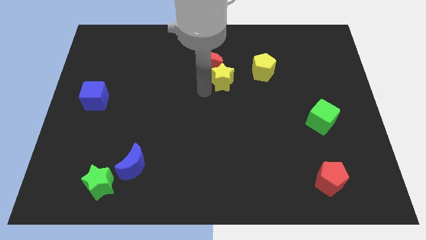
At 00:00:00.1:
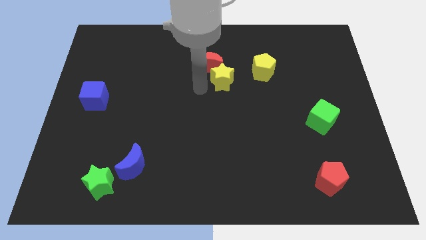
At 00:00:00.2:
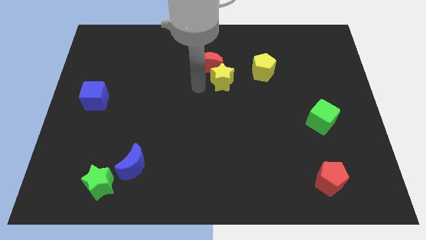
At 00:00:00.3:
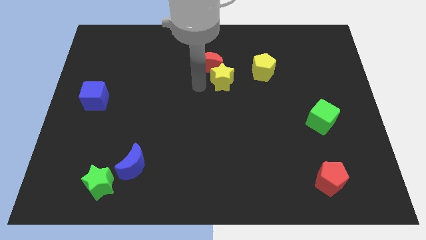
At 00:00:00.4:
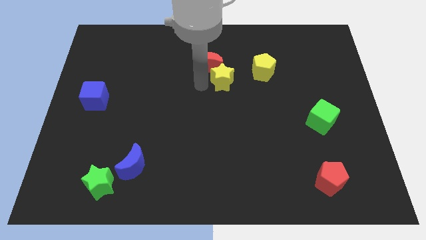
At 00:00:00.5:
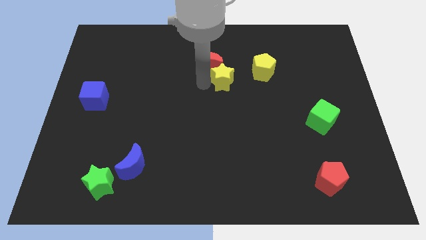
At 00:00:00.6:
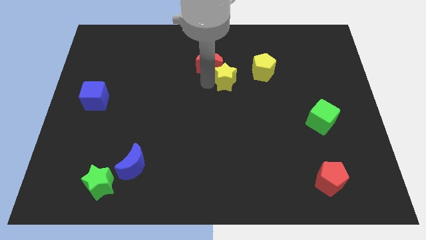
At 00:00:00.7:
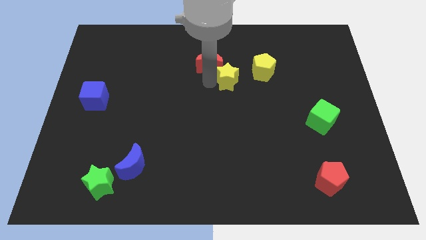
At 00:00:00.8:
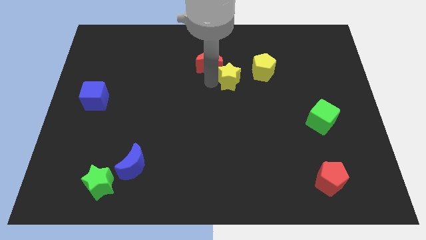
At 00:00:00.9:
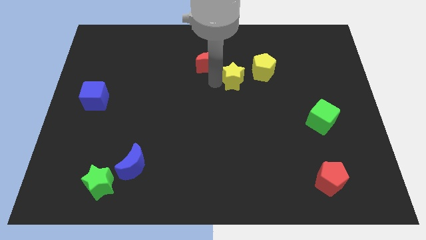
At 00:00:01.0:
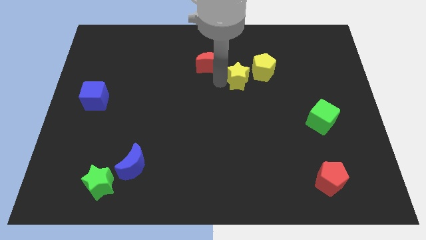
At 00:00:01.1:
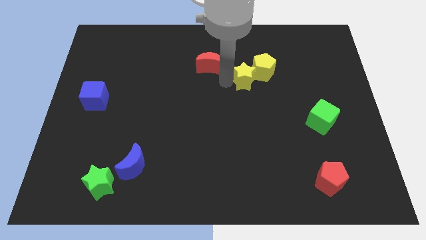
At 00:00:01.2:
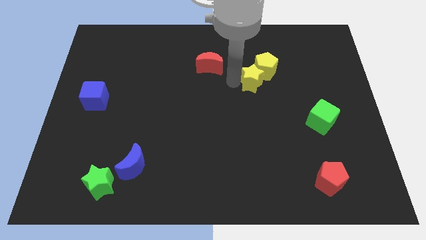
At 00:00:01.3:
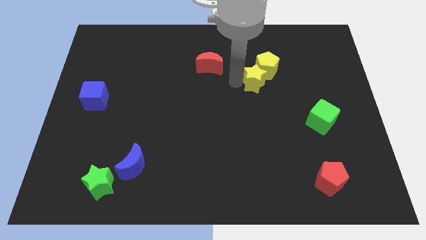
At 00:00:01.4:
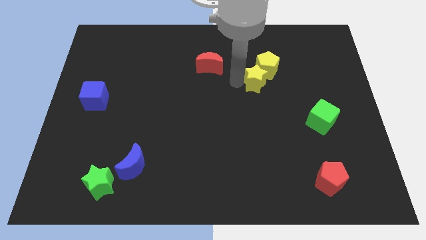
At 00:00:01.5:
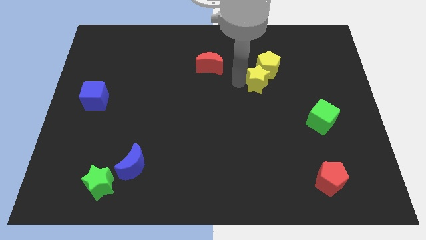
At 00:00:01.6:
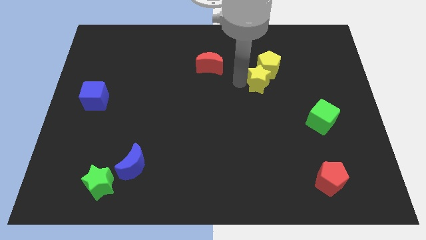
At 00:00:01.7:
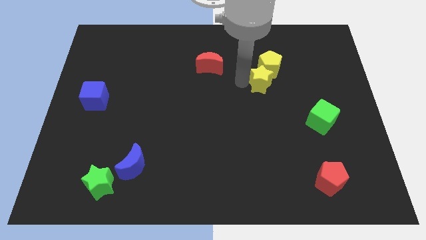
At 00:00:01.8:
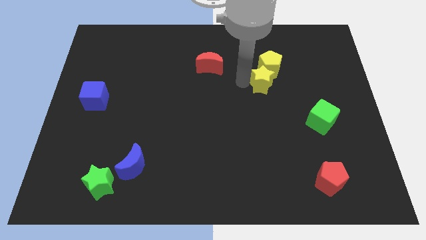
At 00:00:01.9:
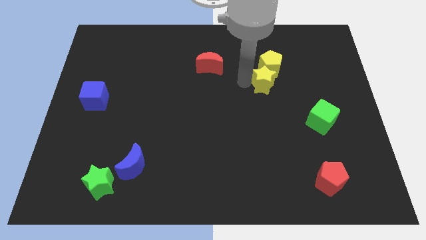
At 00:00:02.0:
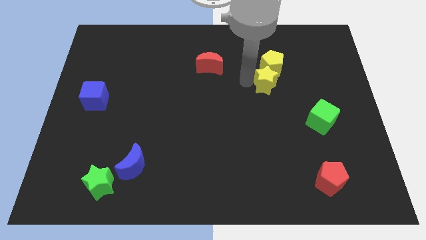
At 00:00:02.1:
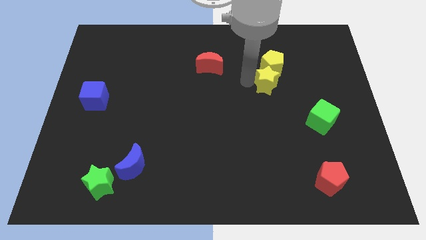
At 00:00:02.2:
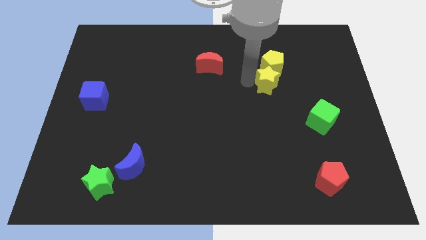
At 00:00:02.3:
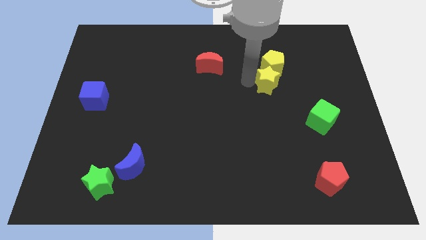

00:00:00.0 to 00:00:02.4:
push yellow star into yellow pentagon

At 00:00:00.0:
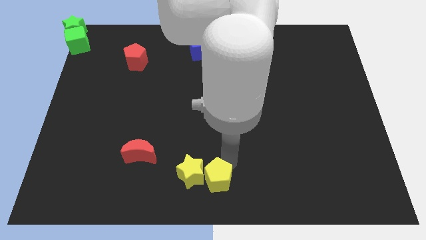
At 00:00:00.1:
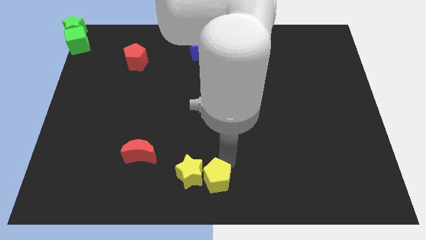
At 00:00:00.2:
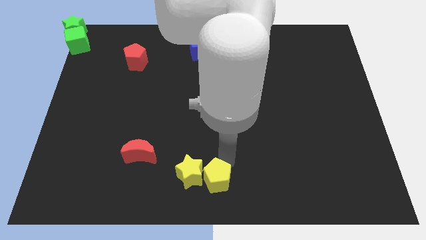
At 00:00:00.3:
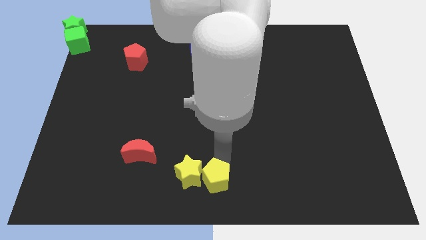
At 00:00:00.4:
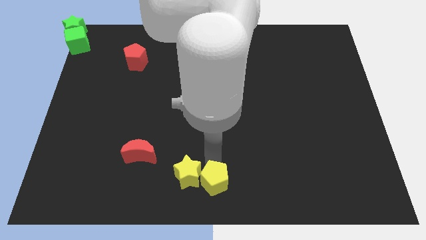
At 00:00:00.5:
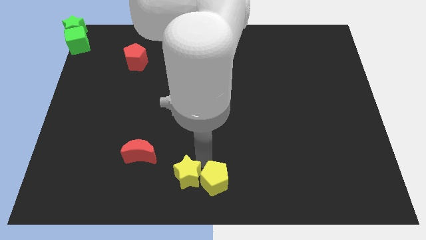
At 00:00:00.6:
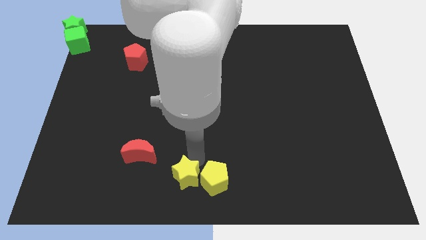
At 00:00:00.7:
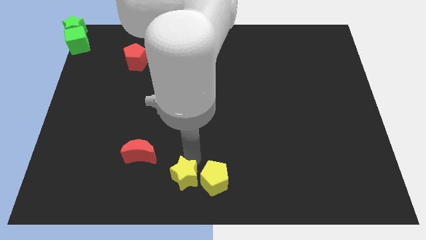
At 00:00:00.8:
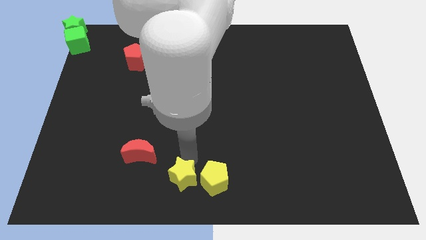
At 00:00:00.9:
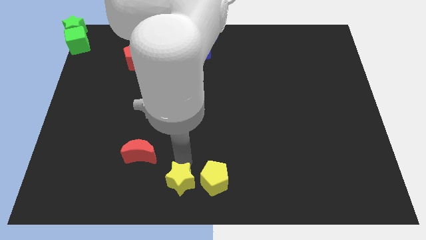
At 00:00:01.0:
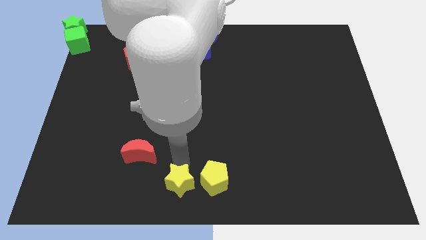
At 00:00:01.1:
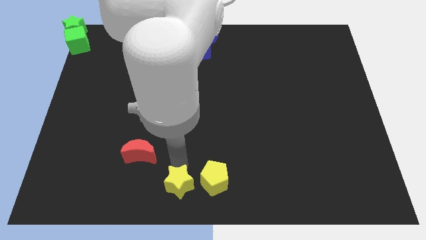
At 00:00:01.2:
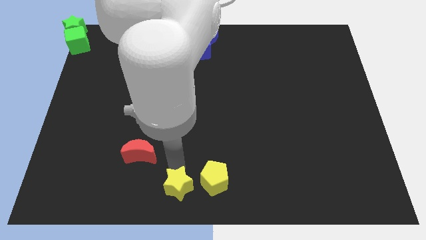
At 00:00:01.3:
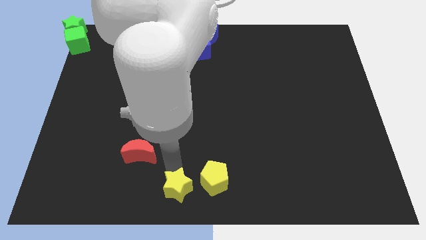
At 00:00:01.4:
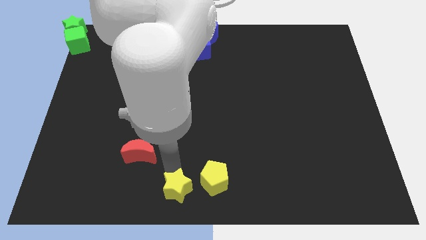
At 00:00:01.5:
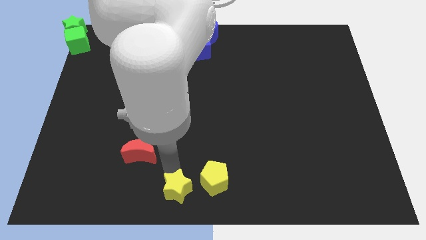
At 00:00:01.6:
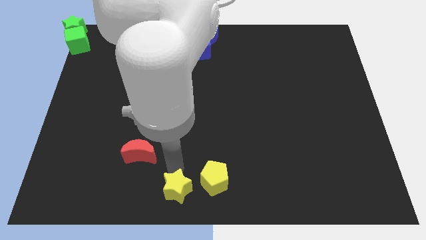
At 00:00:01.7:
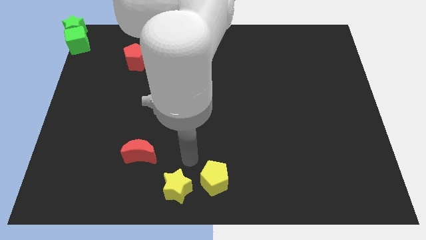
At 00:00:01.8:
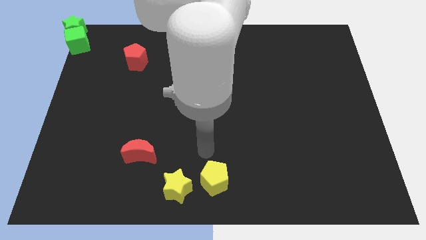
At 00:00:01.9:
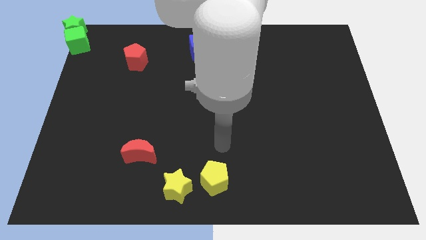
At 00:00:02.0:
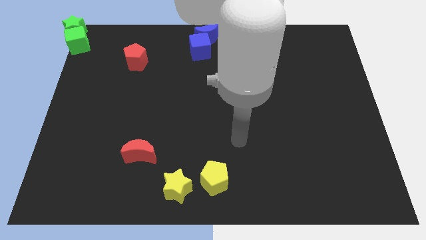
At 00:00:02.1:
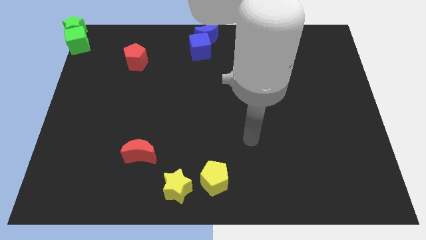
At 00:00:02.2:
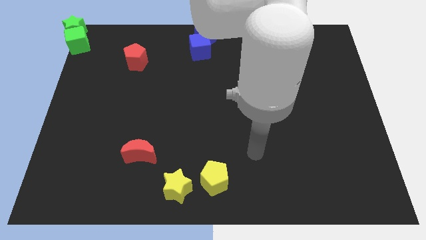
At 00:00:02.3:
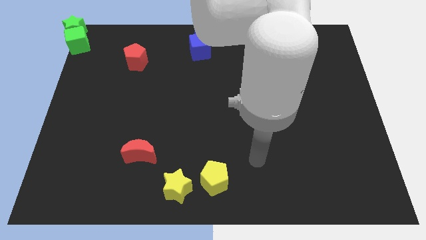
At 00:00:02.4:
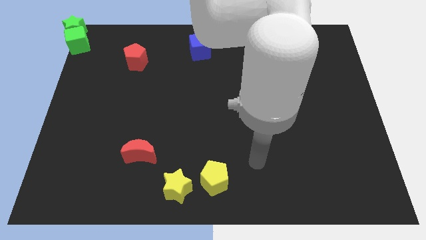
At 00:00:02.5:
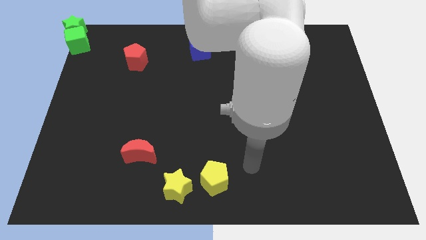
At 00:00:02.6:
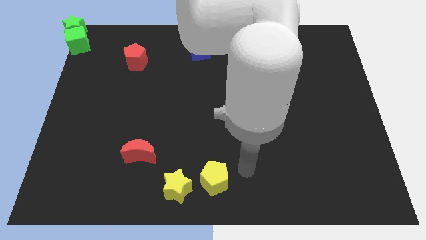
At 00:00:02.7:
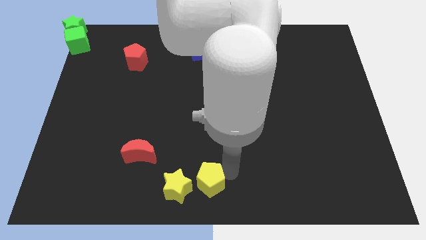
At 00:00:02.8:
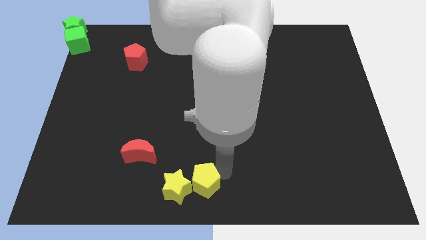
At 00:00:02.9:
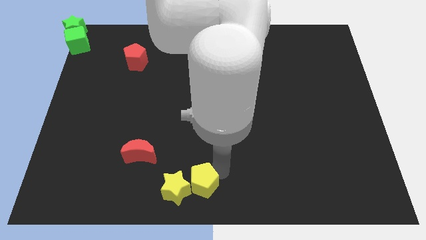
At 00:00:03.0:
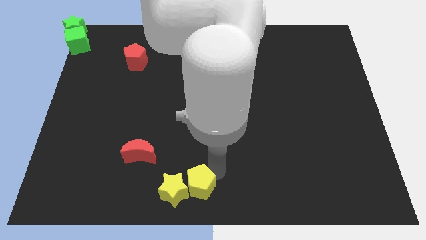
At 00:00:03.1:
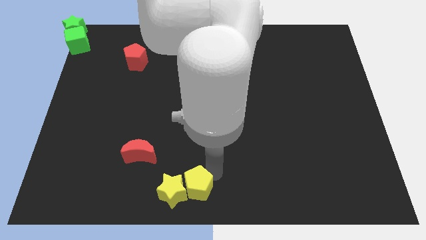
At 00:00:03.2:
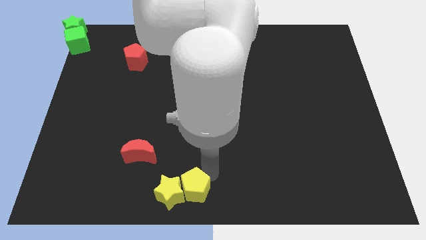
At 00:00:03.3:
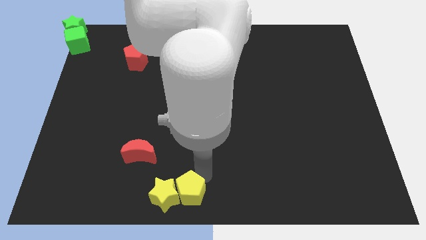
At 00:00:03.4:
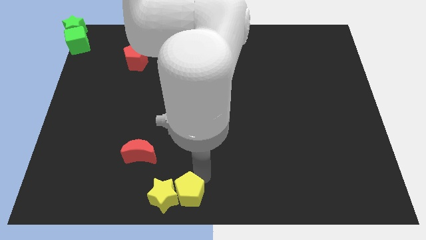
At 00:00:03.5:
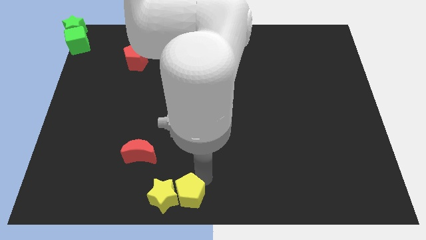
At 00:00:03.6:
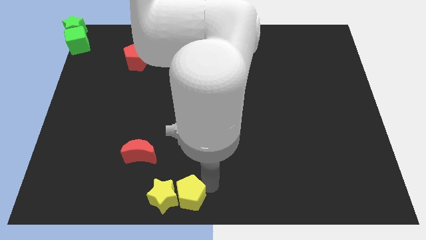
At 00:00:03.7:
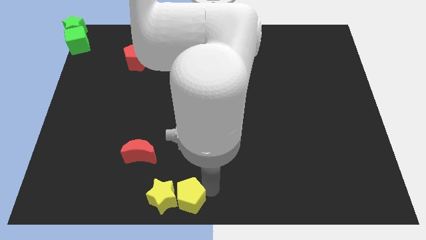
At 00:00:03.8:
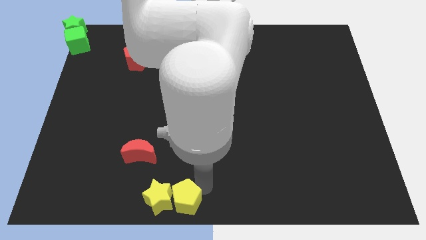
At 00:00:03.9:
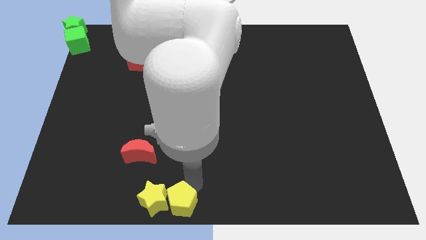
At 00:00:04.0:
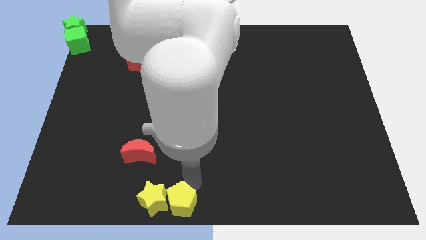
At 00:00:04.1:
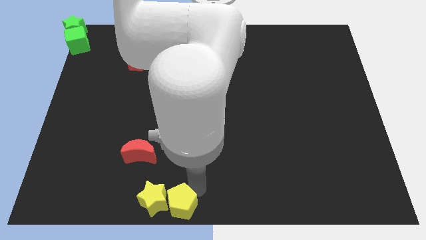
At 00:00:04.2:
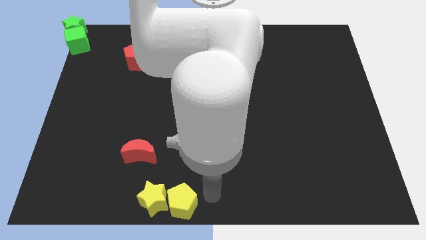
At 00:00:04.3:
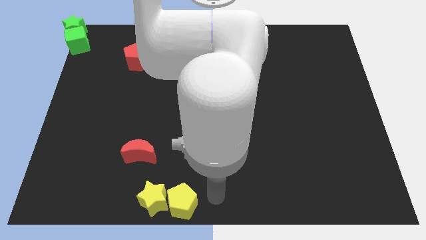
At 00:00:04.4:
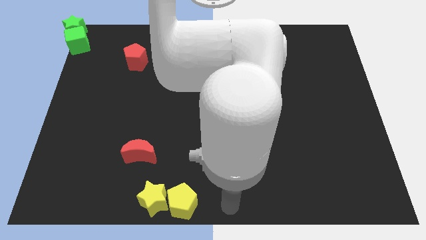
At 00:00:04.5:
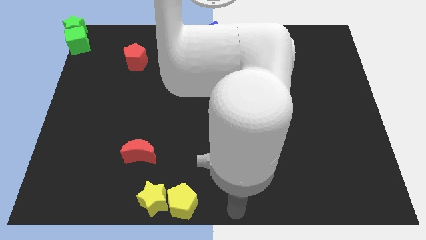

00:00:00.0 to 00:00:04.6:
slide the yellow star and yellow pentagon to the bottom center of the board

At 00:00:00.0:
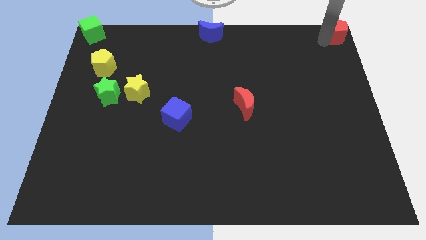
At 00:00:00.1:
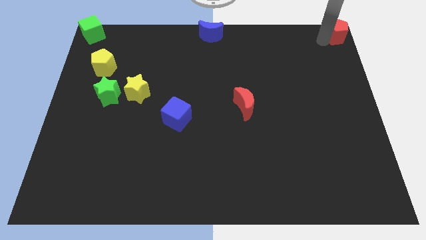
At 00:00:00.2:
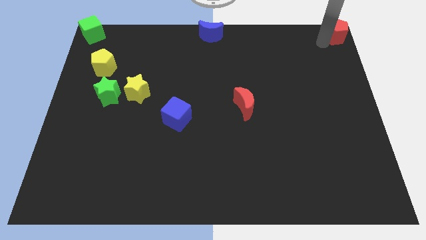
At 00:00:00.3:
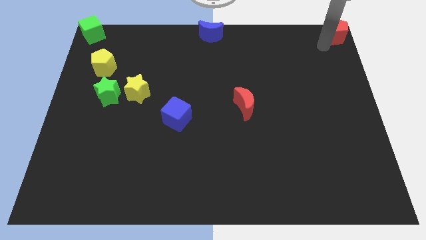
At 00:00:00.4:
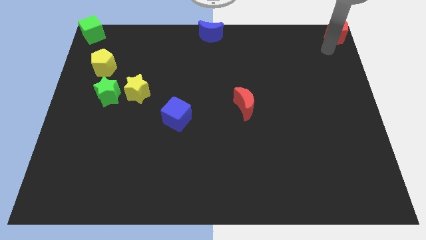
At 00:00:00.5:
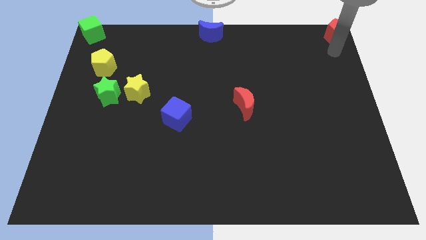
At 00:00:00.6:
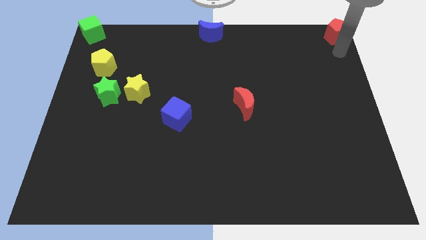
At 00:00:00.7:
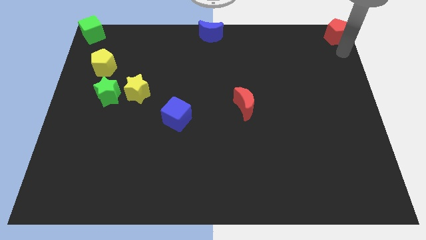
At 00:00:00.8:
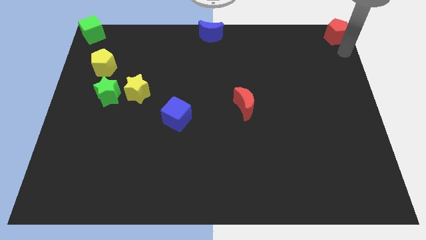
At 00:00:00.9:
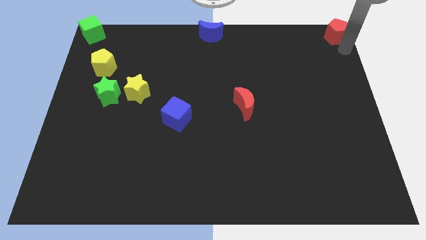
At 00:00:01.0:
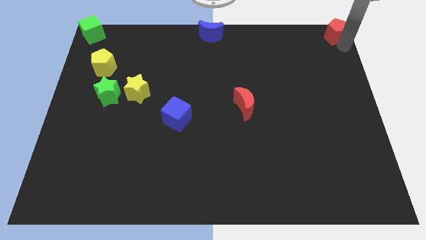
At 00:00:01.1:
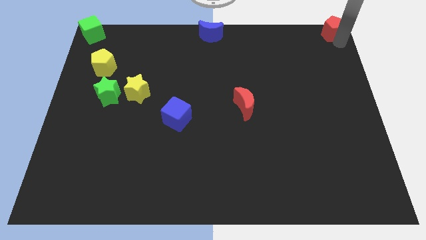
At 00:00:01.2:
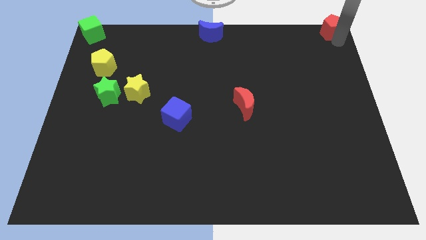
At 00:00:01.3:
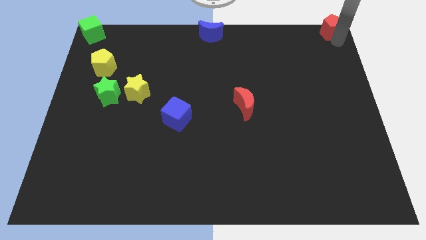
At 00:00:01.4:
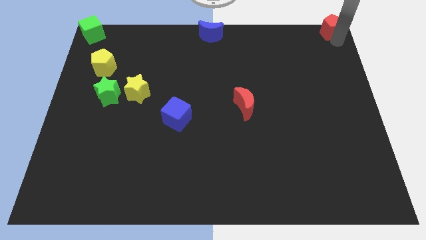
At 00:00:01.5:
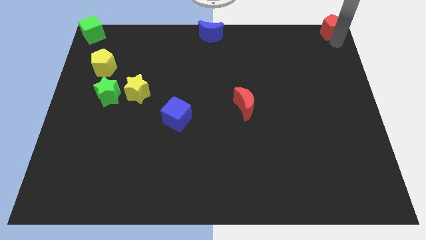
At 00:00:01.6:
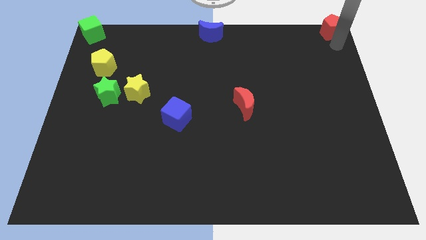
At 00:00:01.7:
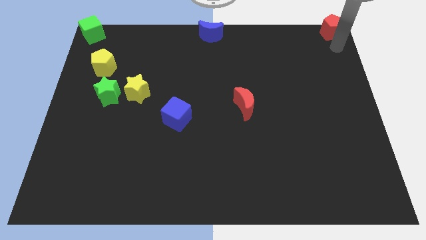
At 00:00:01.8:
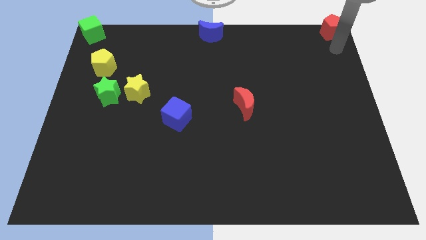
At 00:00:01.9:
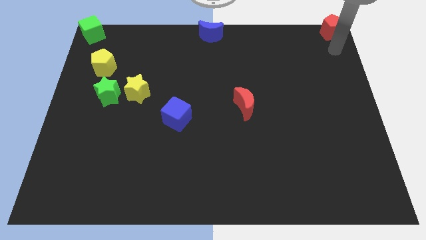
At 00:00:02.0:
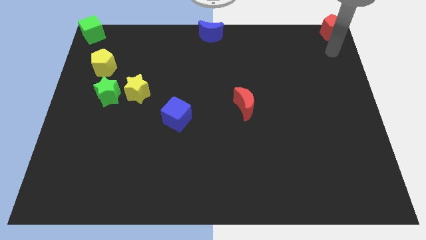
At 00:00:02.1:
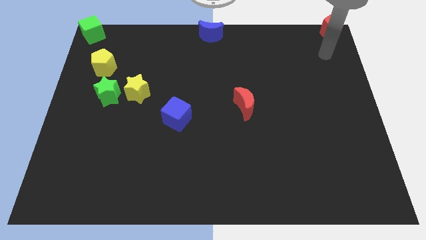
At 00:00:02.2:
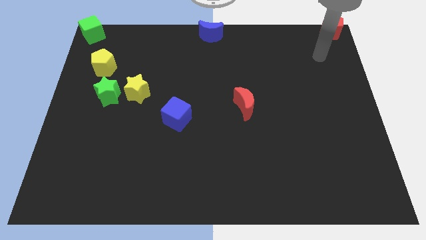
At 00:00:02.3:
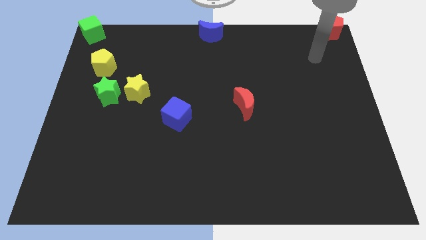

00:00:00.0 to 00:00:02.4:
place the red pentagon at the top right corner of the board
